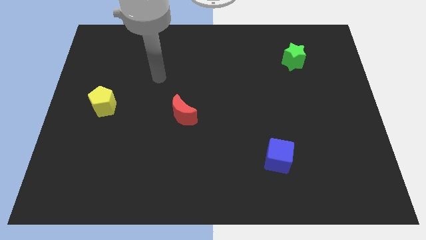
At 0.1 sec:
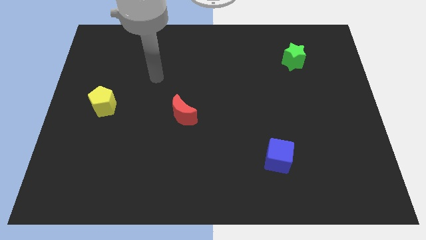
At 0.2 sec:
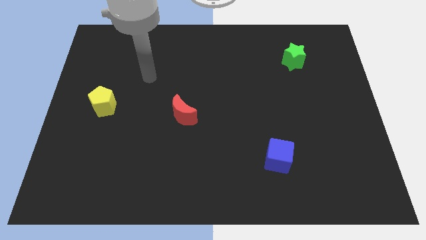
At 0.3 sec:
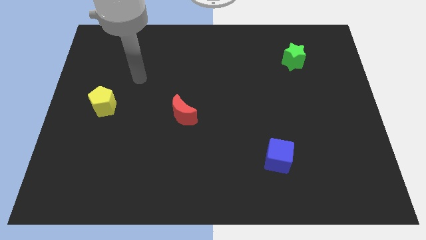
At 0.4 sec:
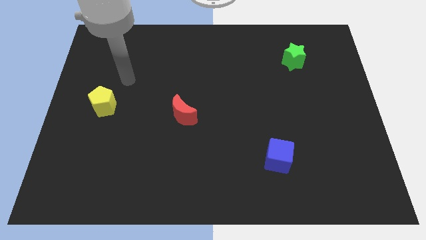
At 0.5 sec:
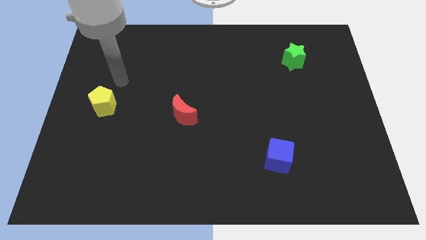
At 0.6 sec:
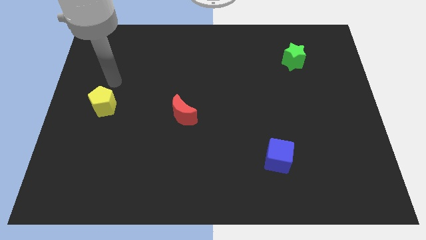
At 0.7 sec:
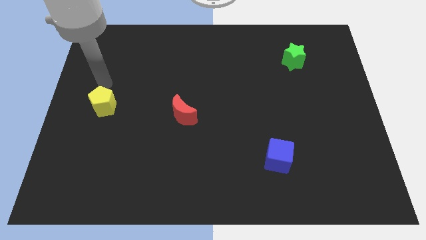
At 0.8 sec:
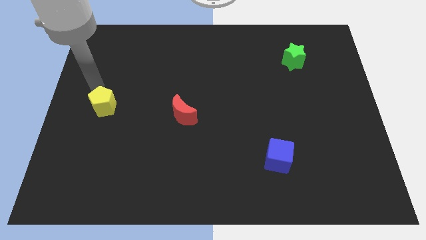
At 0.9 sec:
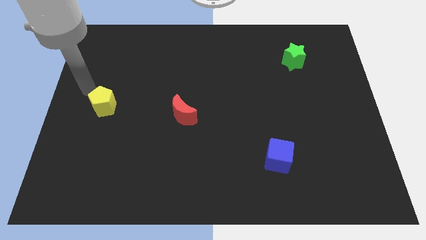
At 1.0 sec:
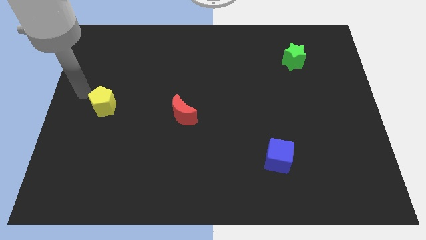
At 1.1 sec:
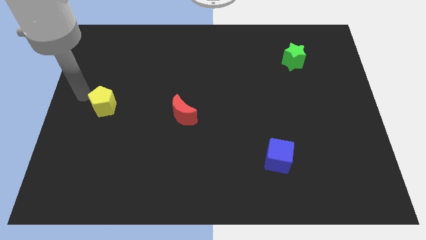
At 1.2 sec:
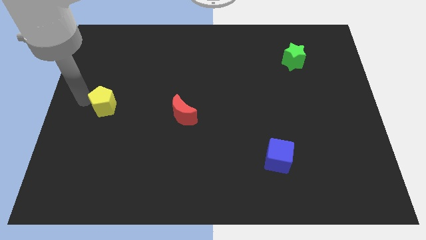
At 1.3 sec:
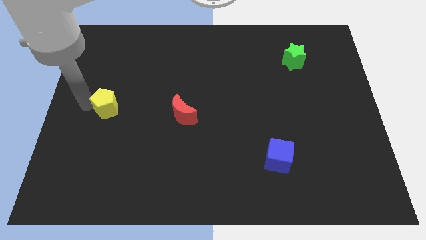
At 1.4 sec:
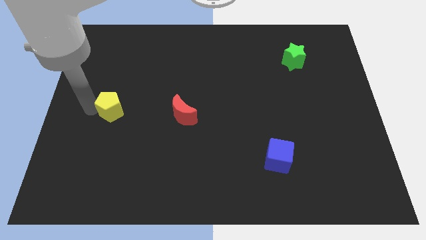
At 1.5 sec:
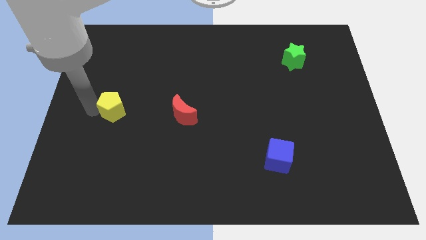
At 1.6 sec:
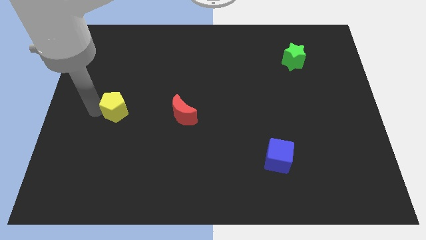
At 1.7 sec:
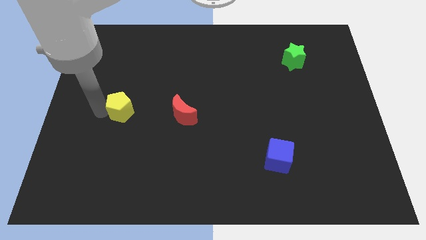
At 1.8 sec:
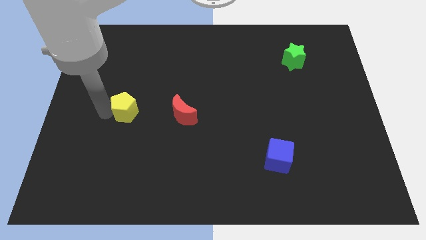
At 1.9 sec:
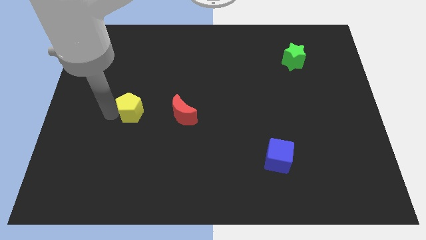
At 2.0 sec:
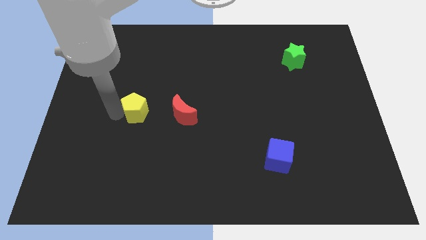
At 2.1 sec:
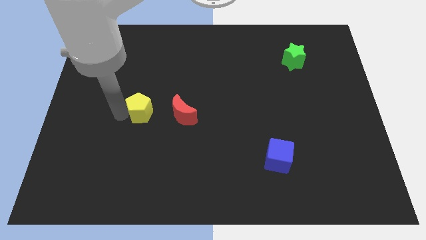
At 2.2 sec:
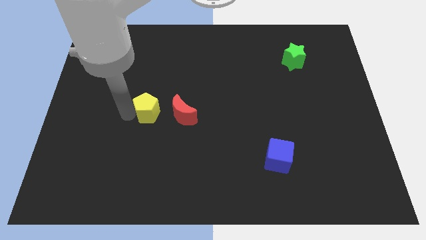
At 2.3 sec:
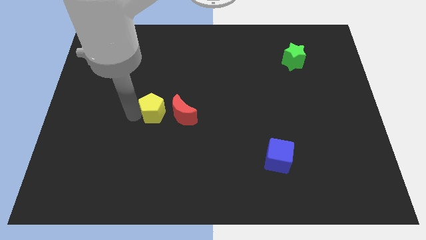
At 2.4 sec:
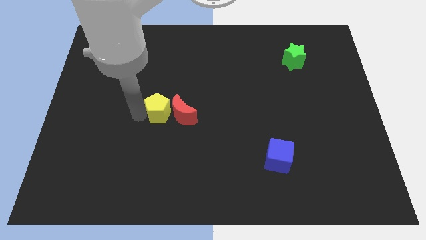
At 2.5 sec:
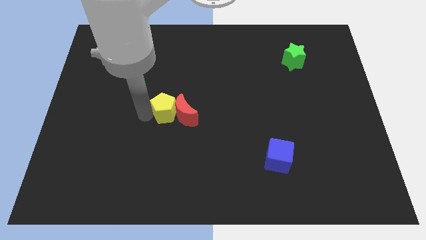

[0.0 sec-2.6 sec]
slide the pentagon close to the red block

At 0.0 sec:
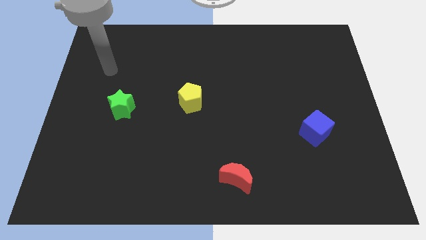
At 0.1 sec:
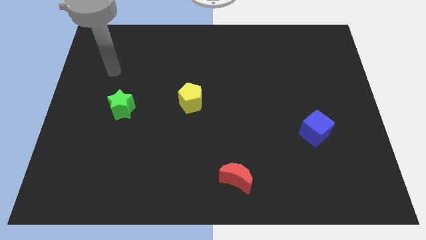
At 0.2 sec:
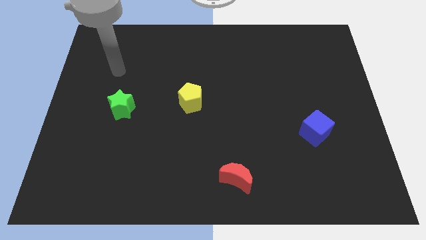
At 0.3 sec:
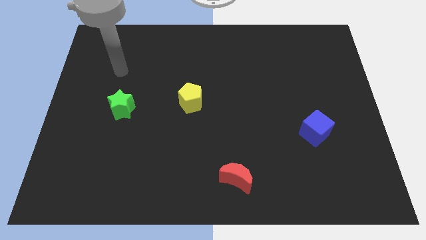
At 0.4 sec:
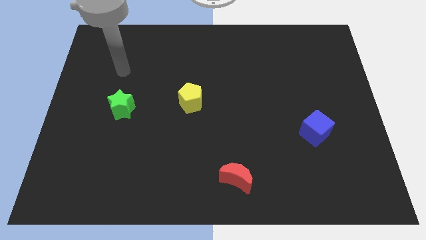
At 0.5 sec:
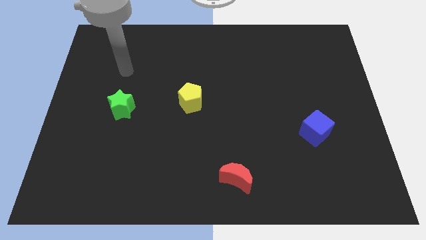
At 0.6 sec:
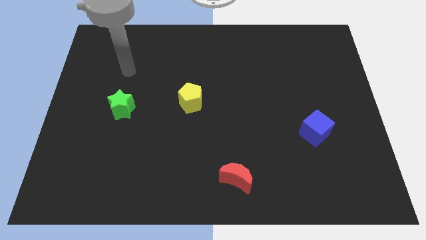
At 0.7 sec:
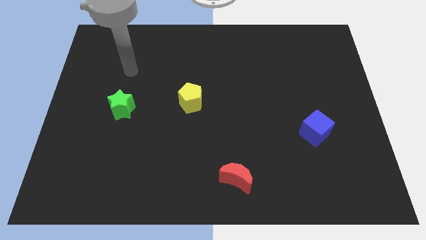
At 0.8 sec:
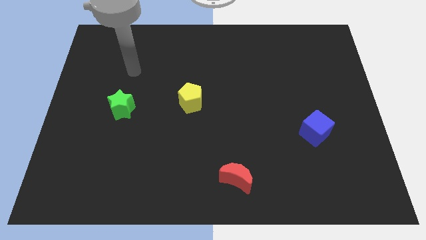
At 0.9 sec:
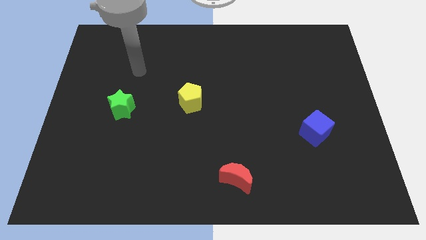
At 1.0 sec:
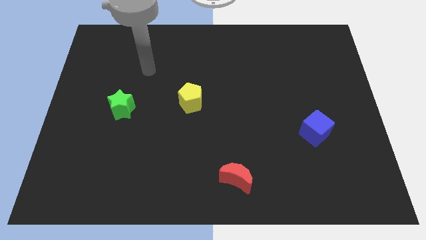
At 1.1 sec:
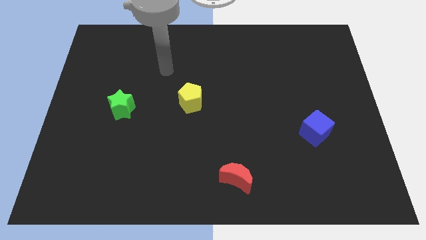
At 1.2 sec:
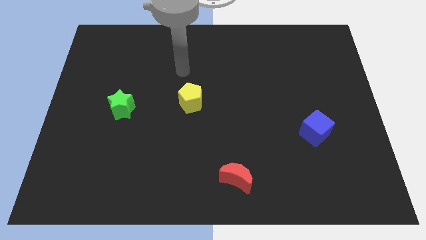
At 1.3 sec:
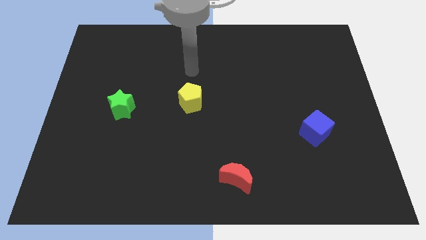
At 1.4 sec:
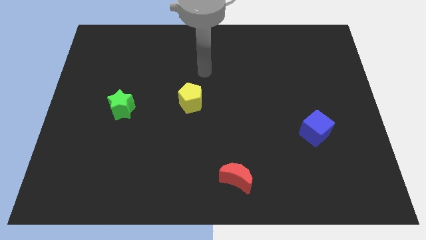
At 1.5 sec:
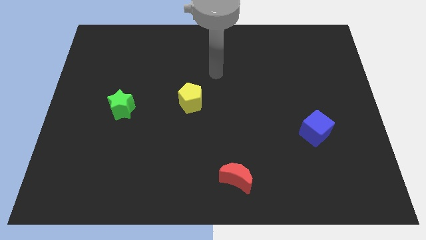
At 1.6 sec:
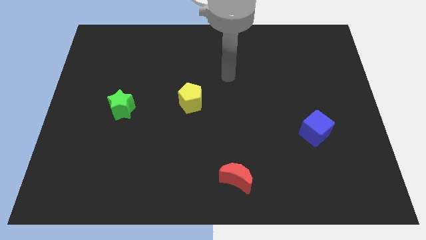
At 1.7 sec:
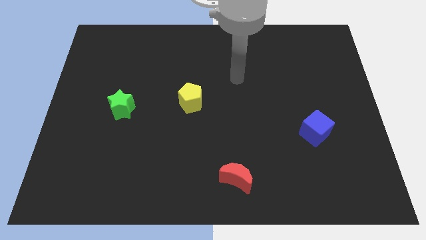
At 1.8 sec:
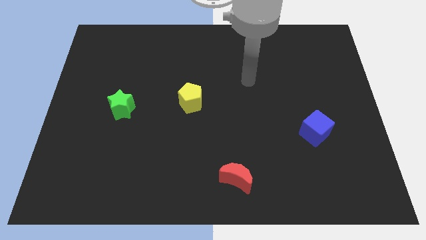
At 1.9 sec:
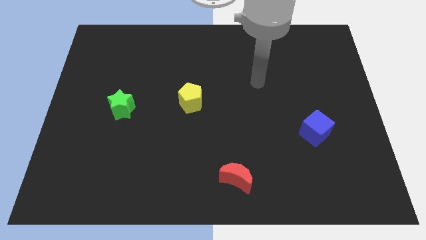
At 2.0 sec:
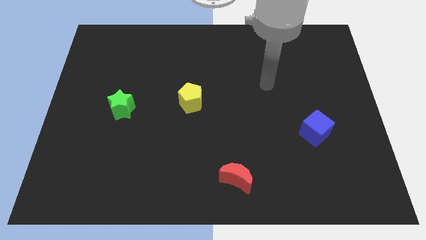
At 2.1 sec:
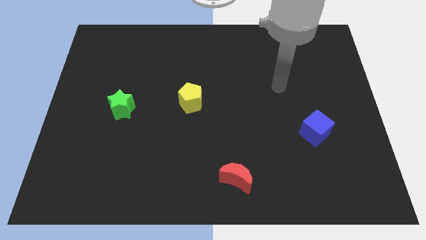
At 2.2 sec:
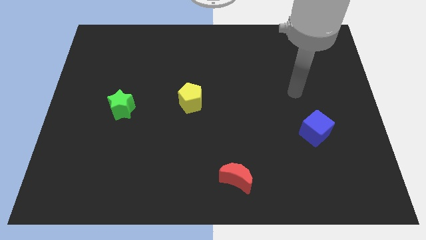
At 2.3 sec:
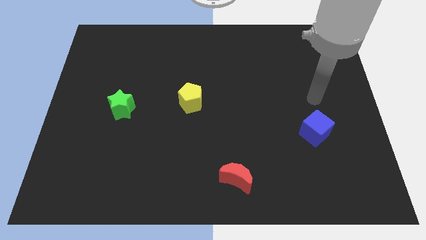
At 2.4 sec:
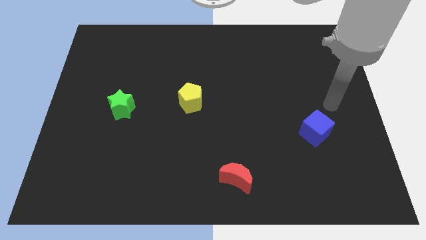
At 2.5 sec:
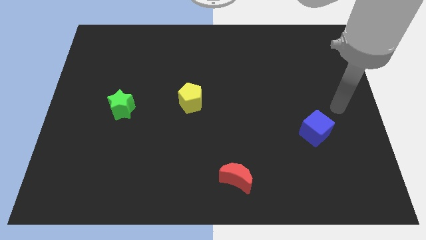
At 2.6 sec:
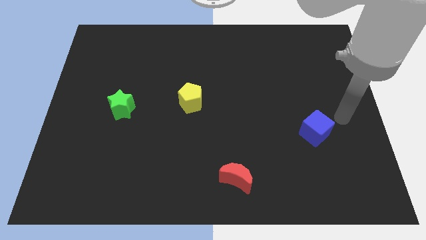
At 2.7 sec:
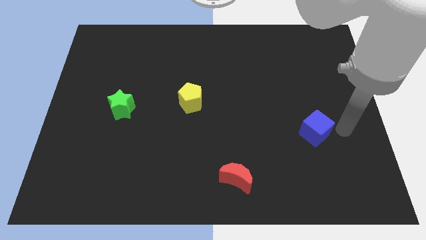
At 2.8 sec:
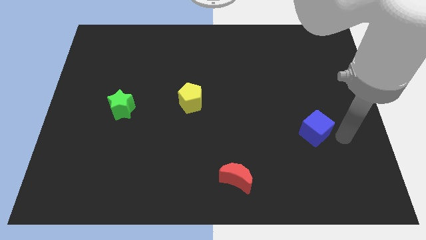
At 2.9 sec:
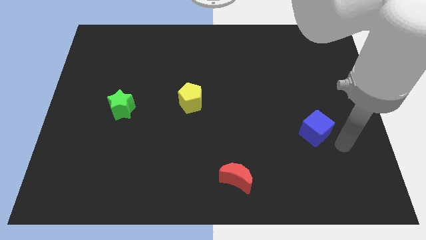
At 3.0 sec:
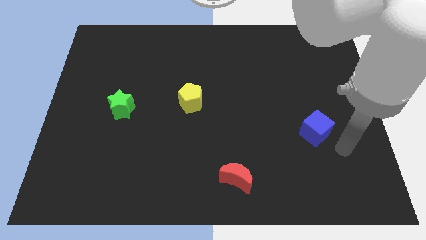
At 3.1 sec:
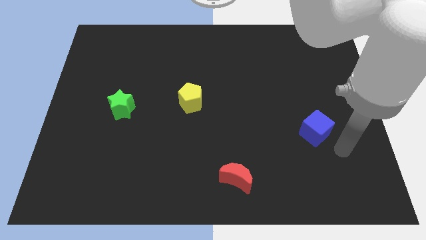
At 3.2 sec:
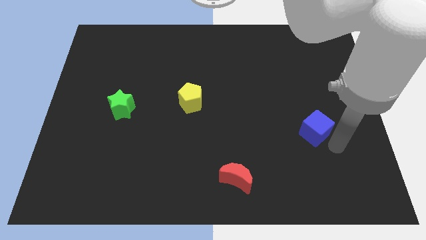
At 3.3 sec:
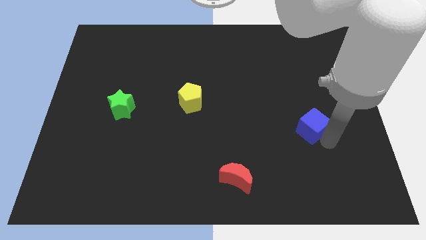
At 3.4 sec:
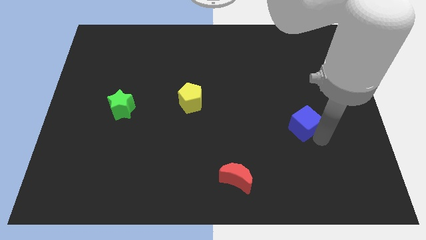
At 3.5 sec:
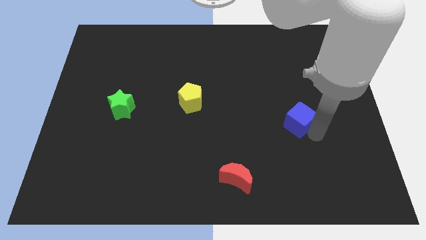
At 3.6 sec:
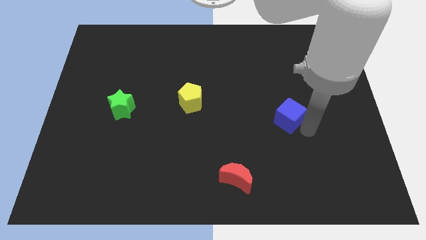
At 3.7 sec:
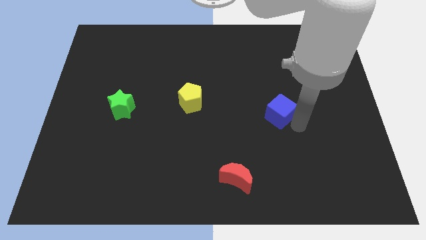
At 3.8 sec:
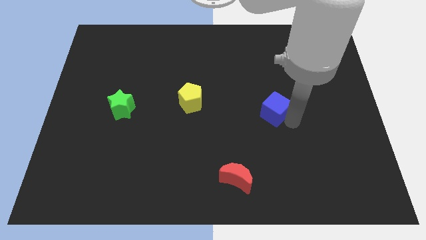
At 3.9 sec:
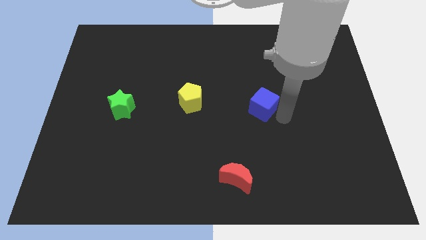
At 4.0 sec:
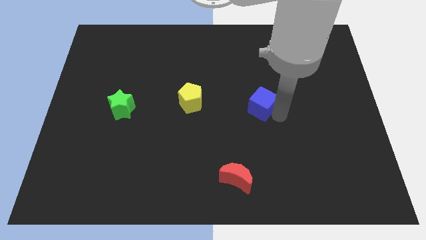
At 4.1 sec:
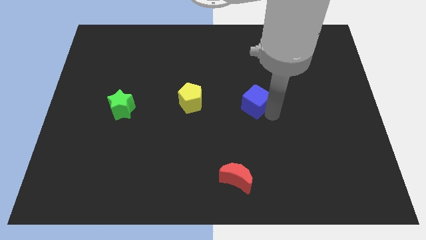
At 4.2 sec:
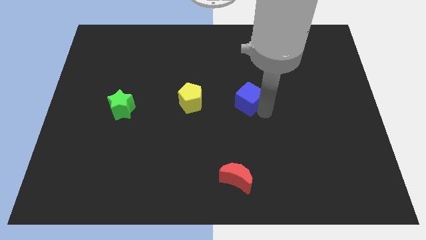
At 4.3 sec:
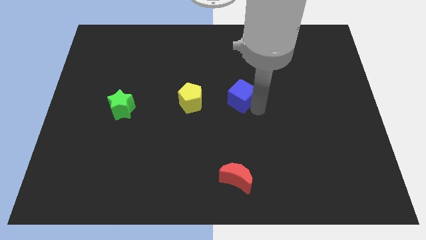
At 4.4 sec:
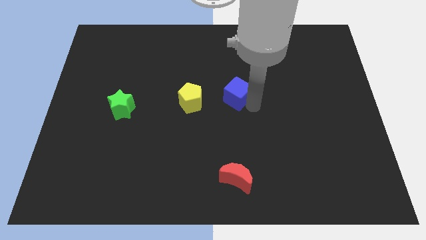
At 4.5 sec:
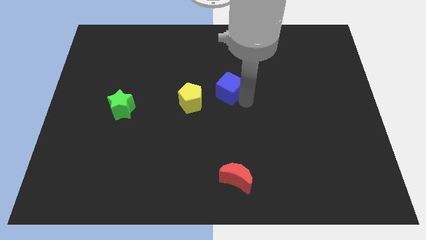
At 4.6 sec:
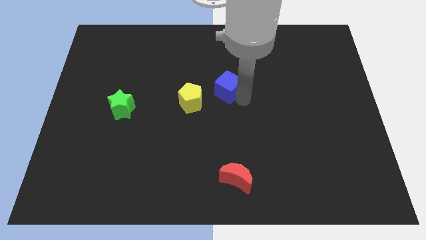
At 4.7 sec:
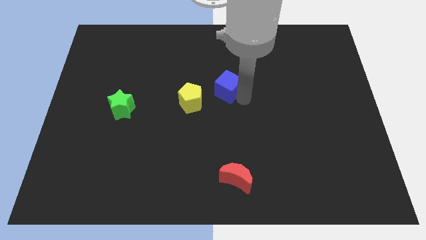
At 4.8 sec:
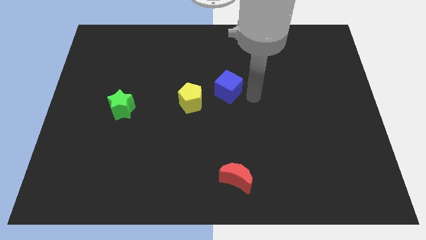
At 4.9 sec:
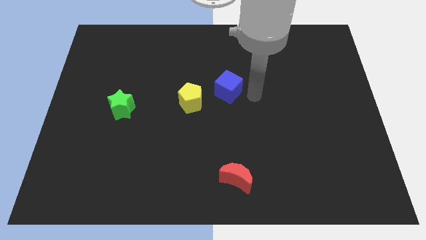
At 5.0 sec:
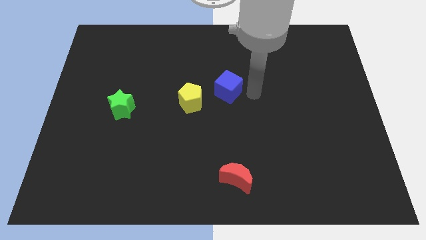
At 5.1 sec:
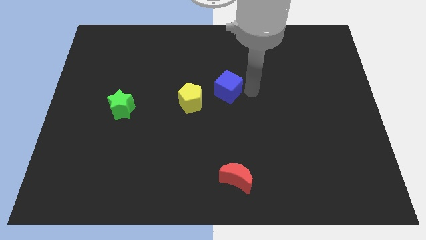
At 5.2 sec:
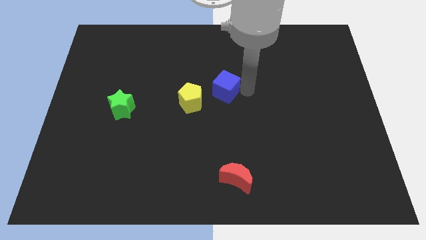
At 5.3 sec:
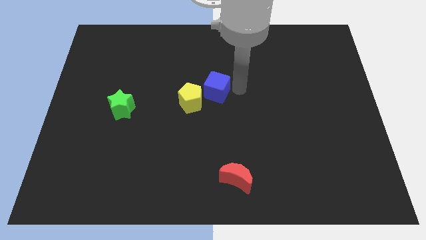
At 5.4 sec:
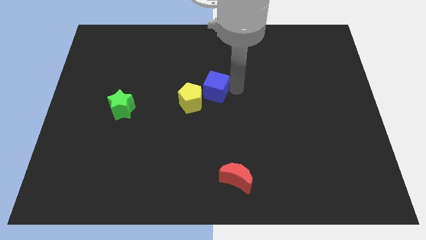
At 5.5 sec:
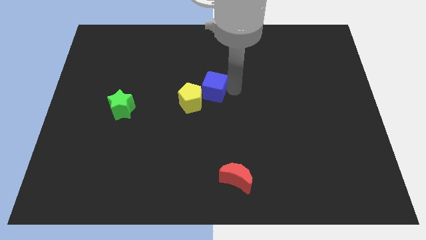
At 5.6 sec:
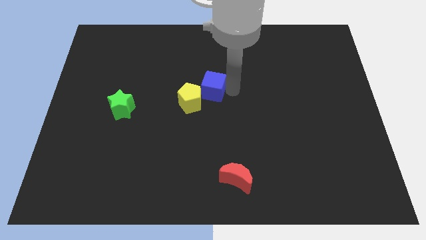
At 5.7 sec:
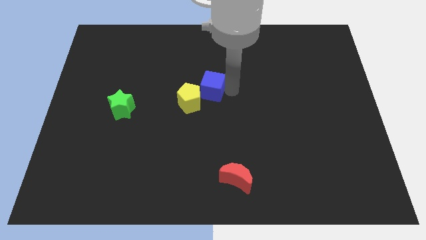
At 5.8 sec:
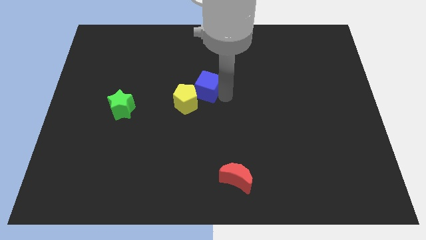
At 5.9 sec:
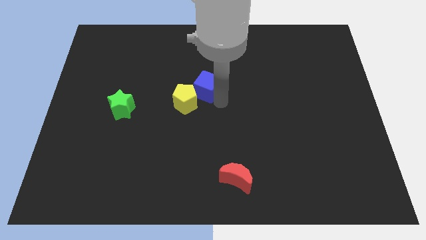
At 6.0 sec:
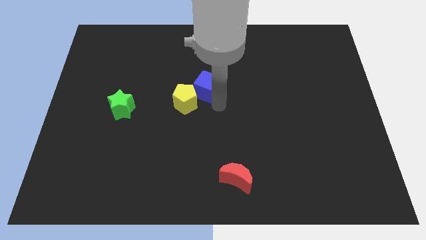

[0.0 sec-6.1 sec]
push the cube to the yellow block

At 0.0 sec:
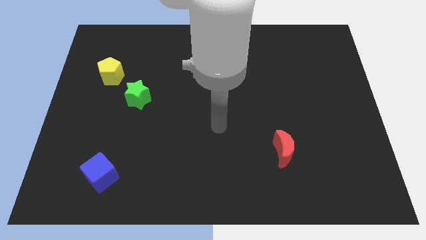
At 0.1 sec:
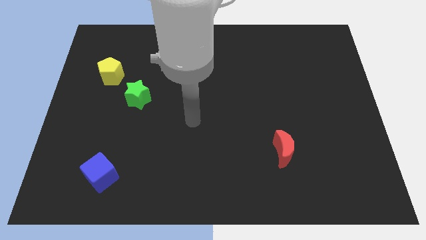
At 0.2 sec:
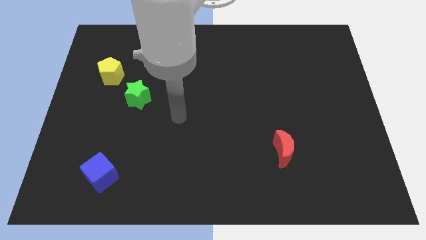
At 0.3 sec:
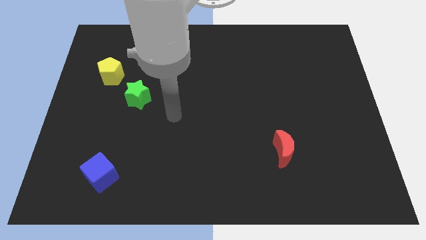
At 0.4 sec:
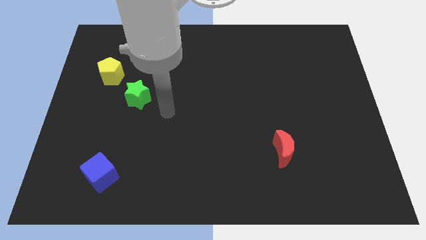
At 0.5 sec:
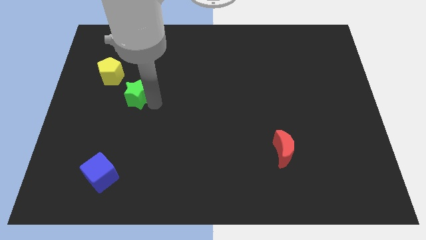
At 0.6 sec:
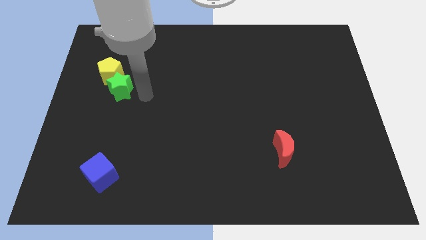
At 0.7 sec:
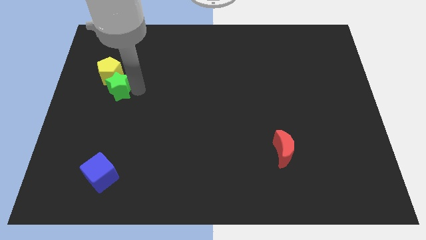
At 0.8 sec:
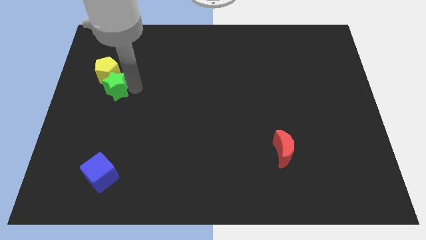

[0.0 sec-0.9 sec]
move the green star close to the yellow pentagon
